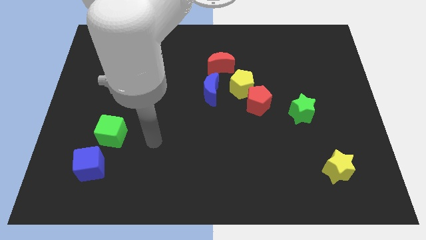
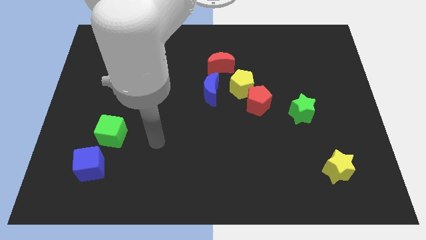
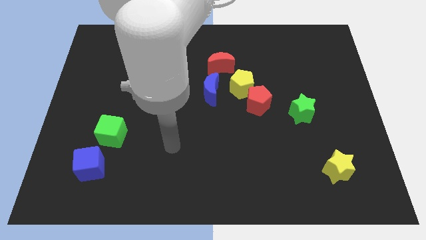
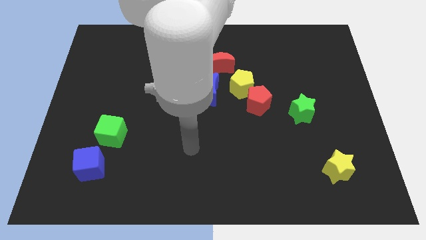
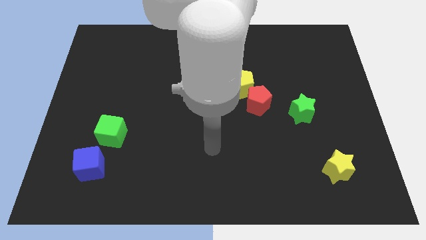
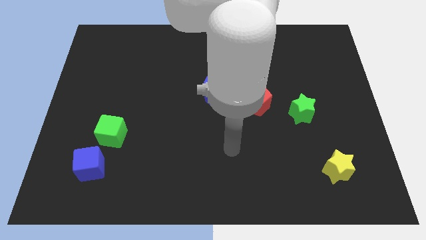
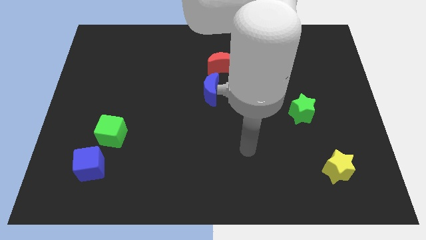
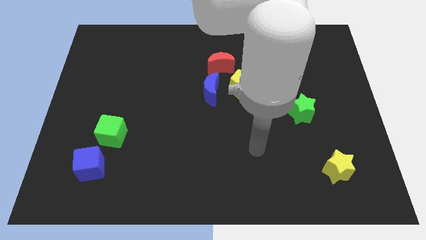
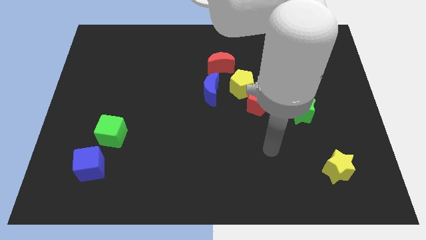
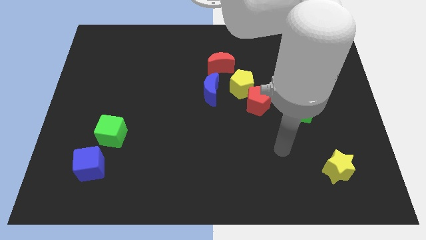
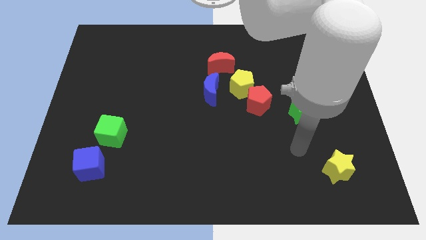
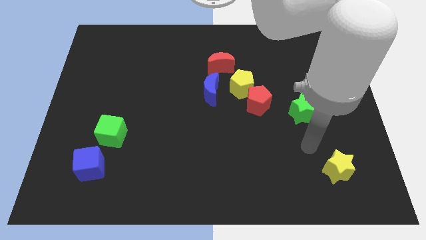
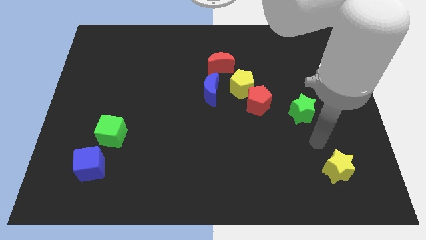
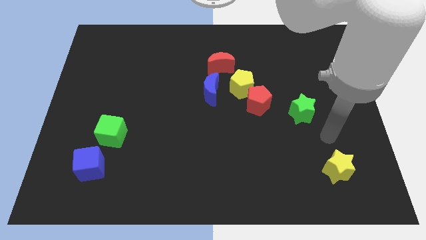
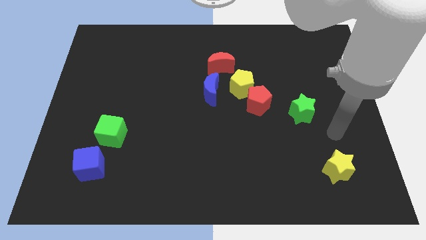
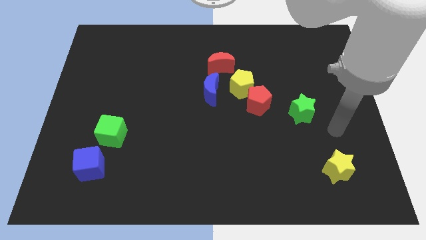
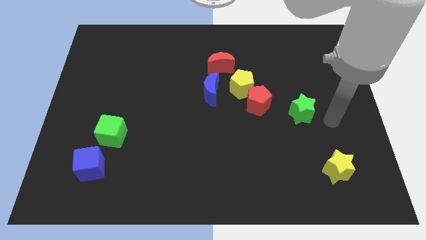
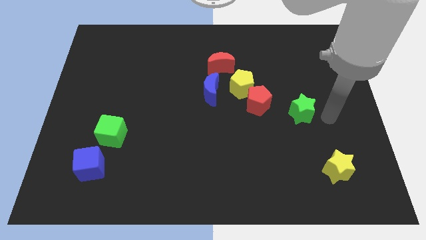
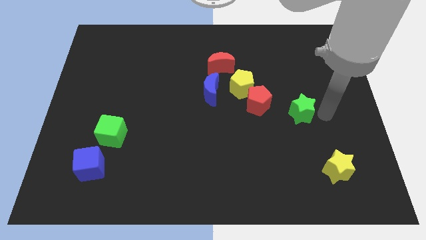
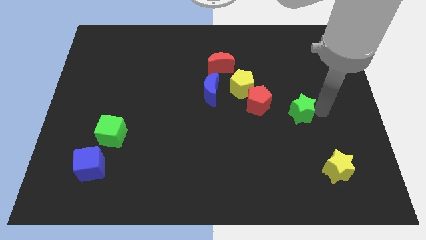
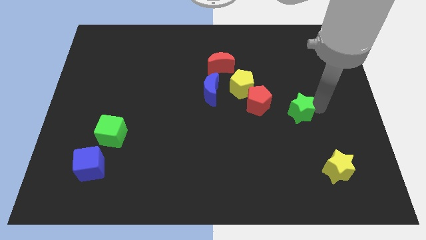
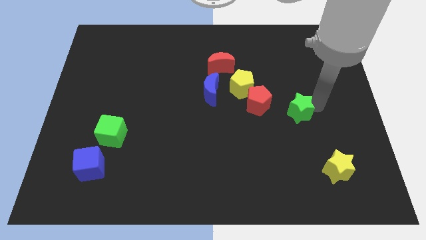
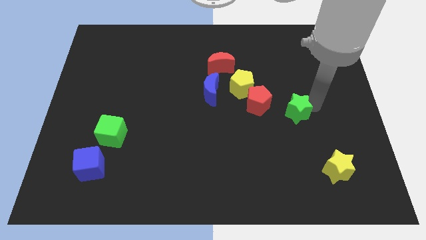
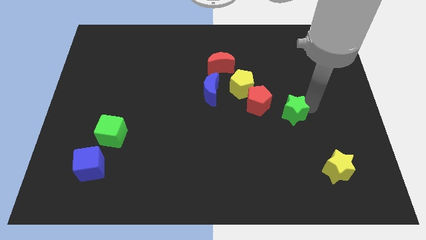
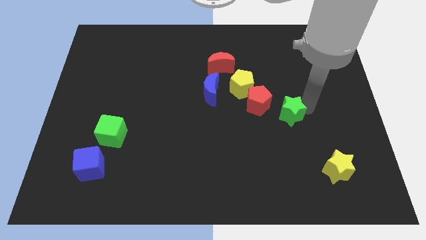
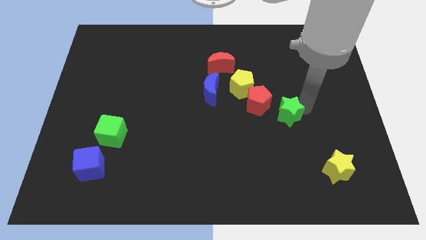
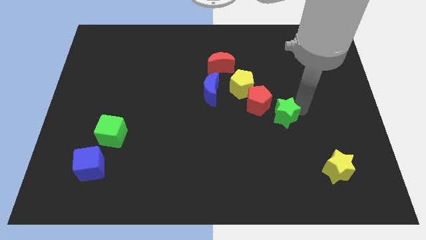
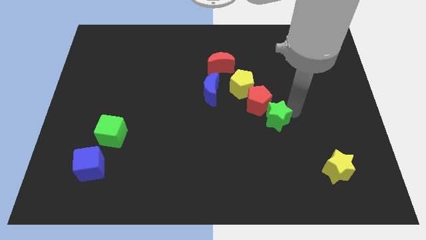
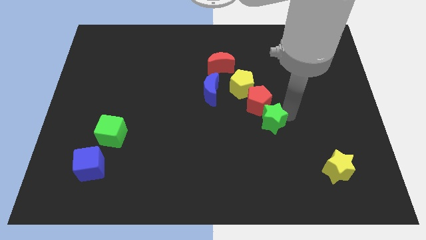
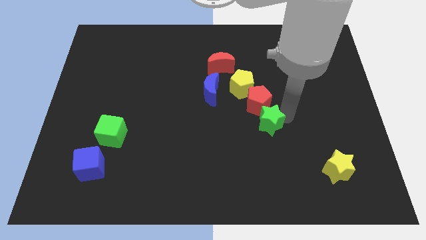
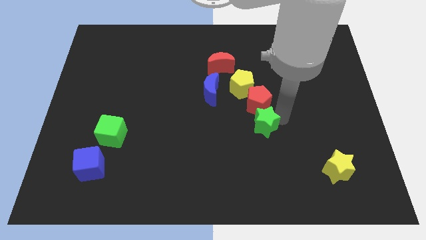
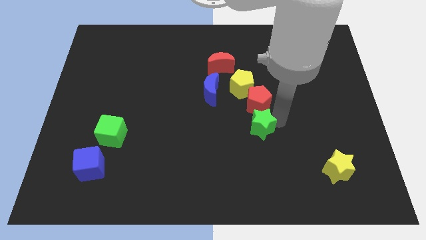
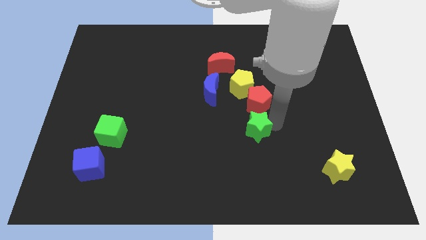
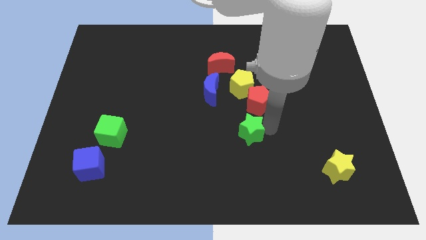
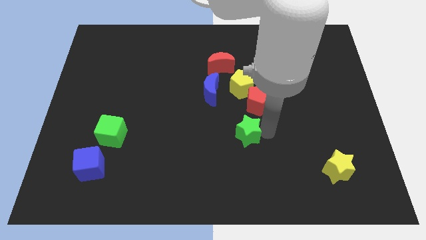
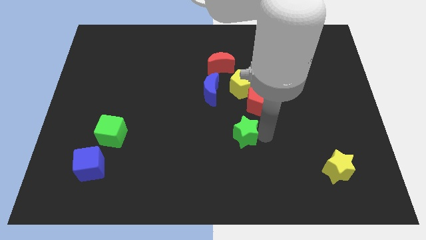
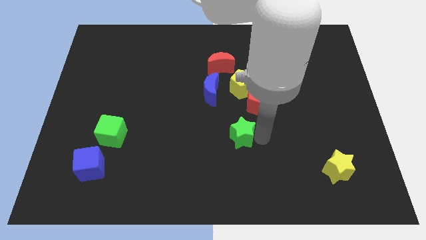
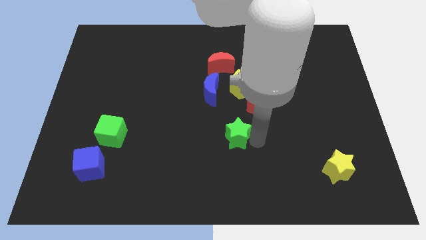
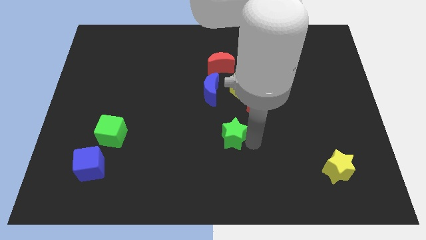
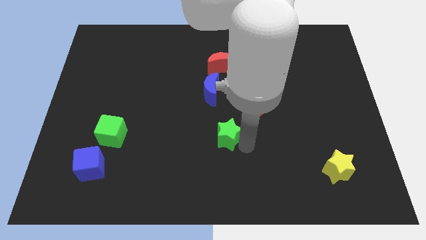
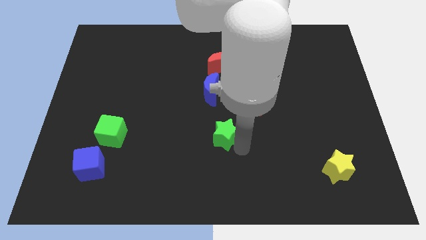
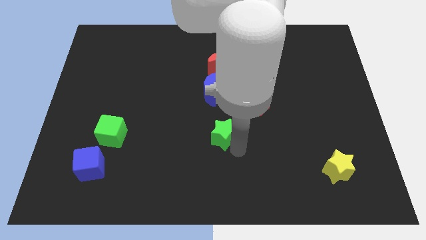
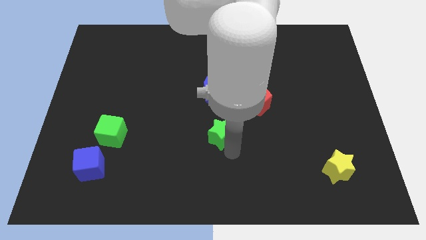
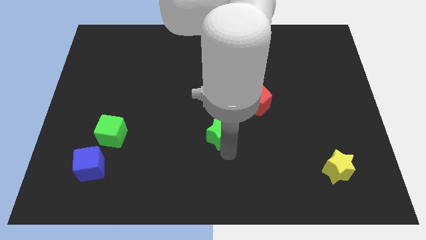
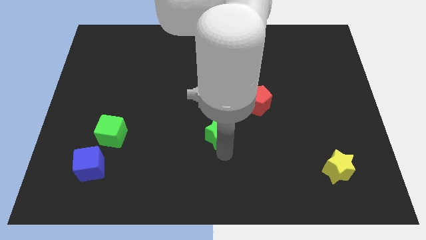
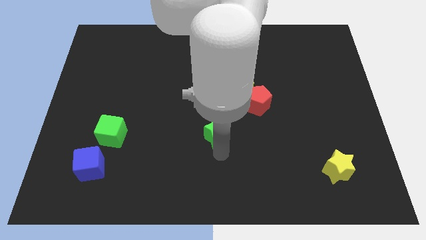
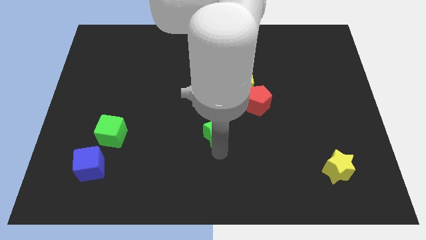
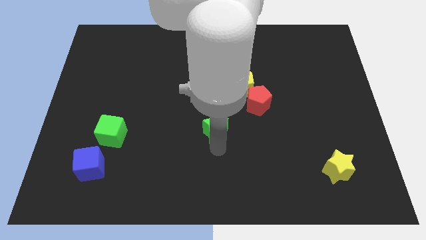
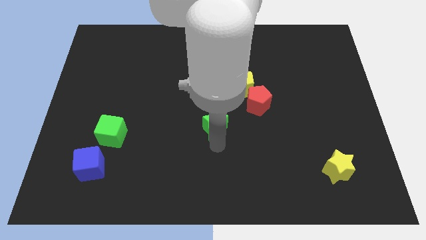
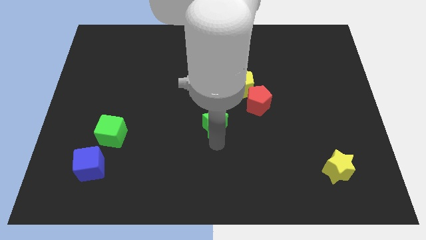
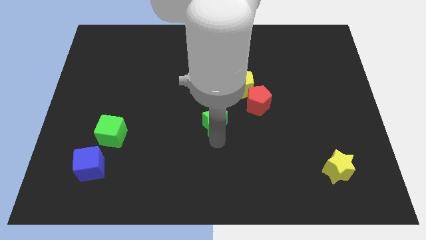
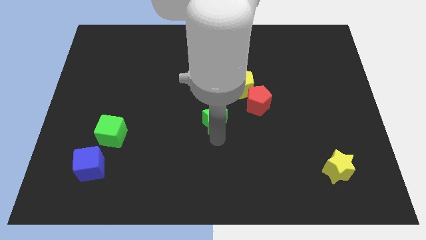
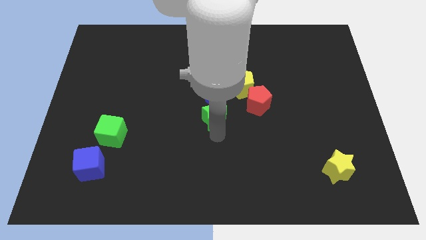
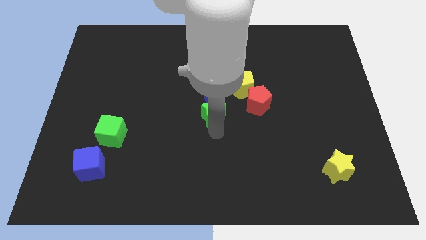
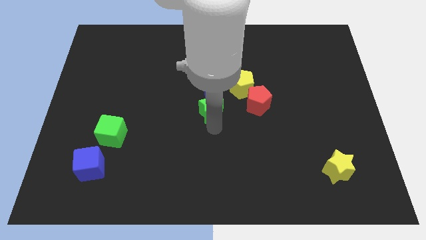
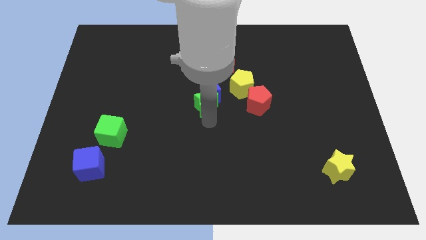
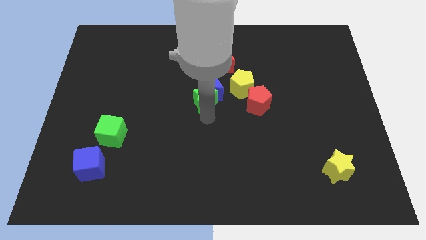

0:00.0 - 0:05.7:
push the green star next to the blue moon
